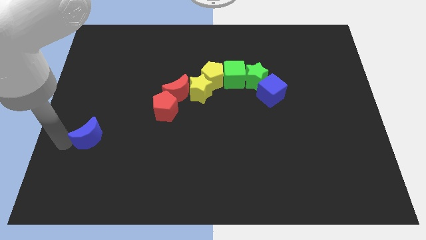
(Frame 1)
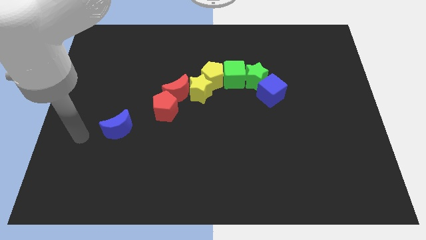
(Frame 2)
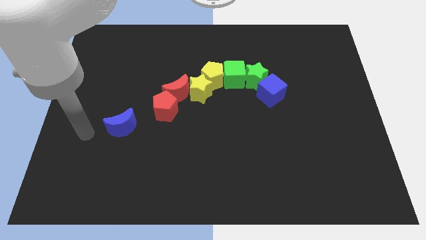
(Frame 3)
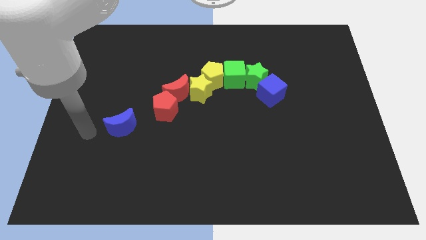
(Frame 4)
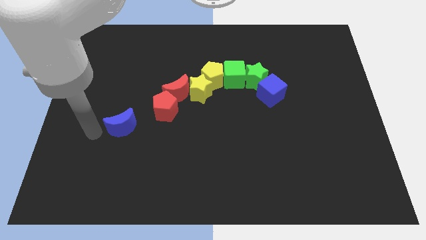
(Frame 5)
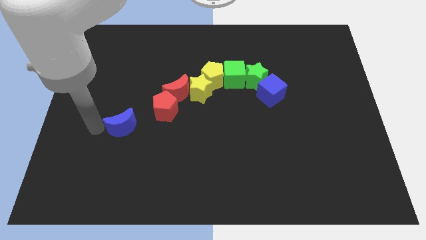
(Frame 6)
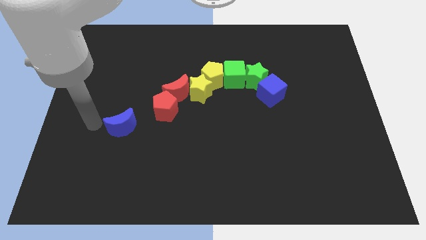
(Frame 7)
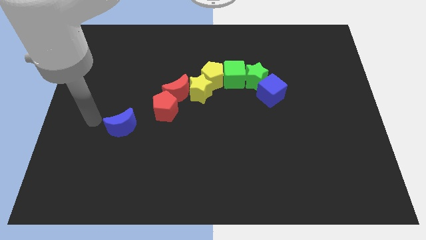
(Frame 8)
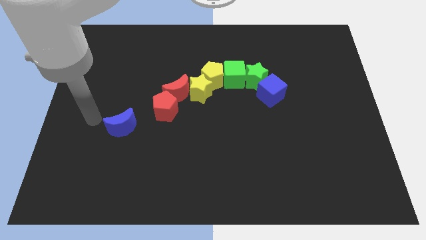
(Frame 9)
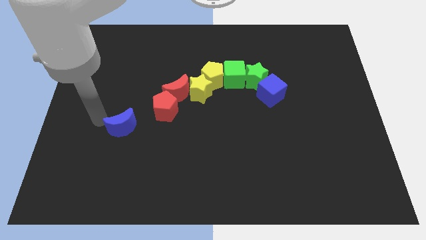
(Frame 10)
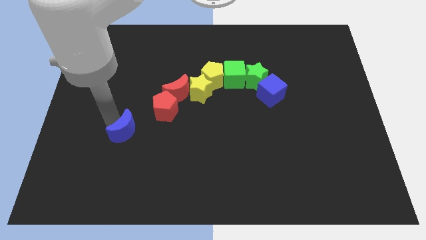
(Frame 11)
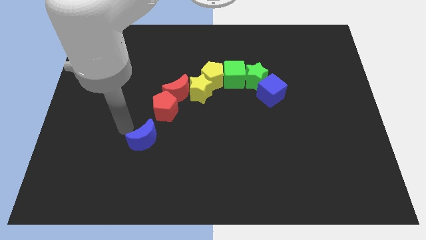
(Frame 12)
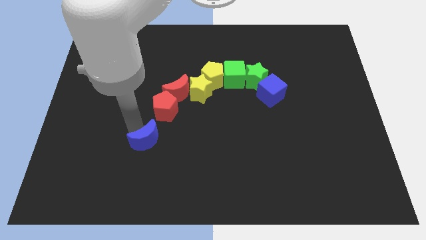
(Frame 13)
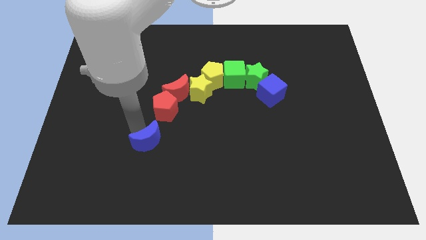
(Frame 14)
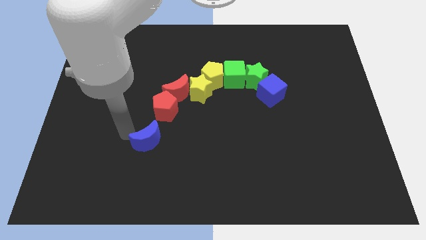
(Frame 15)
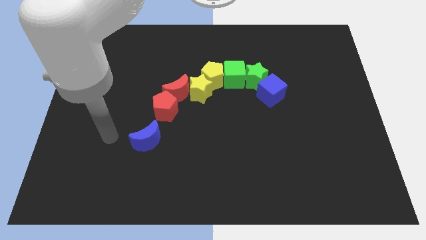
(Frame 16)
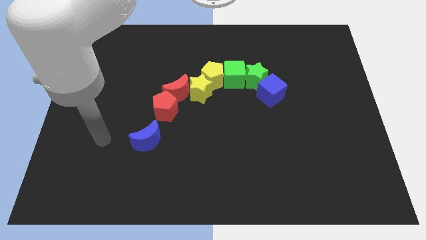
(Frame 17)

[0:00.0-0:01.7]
place blue crescent near to red pentagon

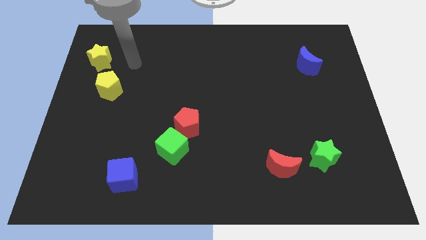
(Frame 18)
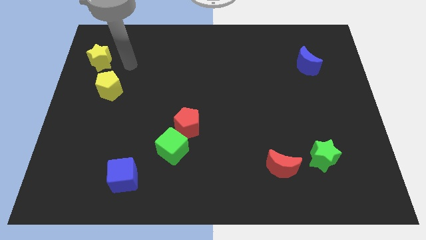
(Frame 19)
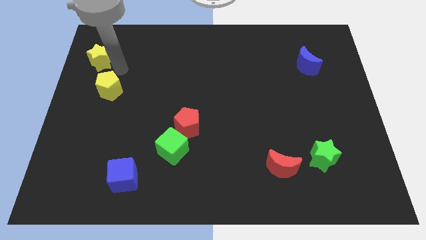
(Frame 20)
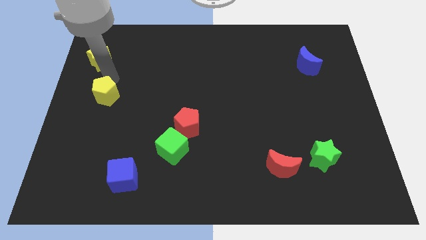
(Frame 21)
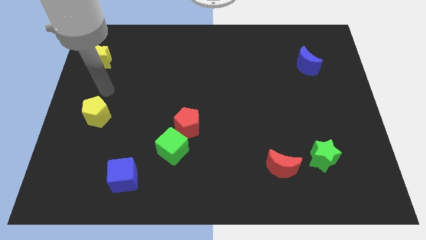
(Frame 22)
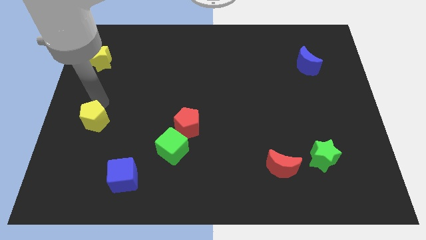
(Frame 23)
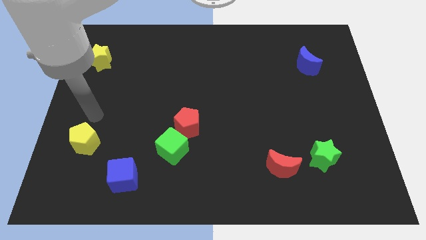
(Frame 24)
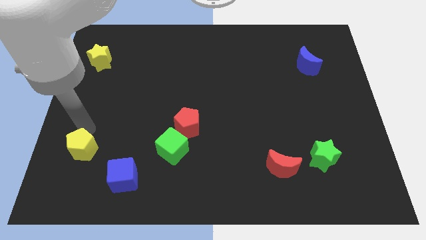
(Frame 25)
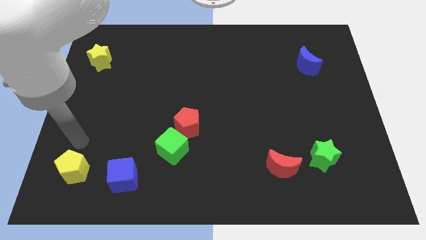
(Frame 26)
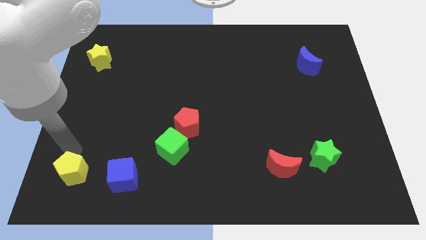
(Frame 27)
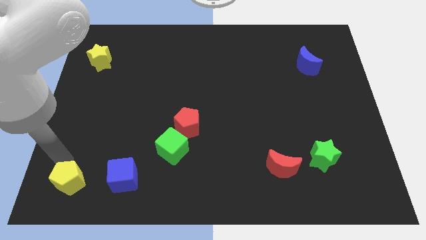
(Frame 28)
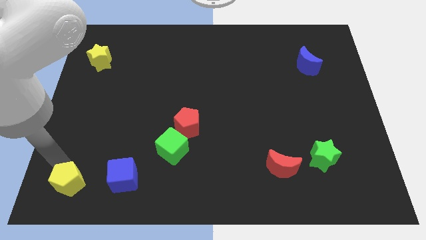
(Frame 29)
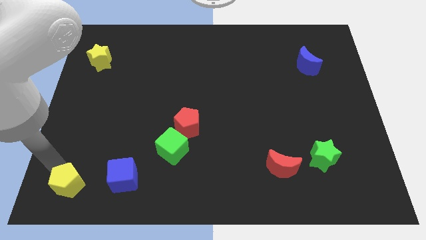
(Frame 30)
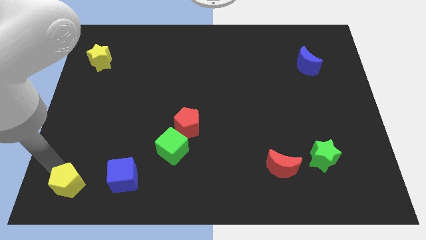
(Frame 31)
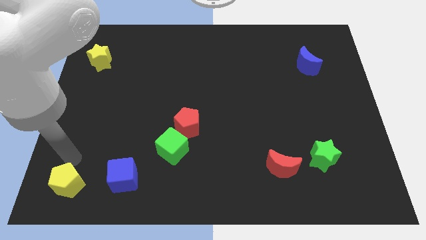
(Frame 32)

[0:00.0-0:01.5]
move the yellow pentagon bottom left to the board

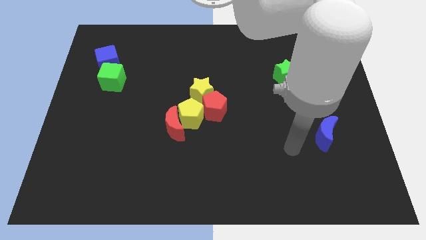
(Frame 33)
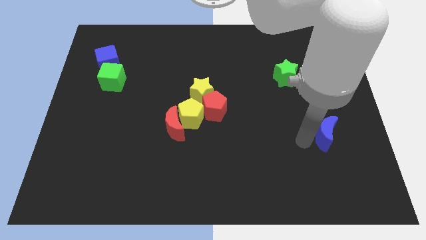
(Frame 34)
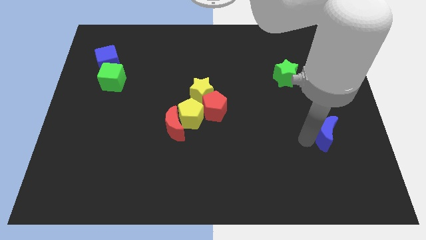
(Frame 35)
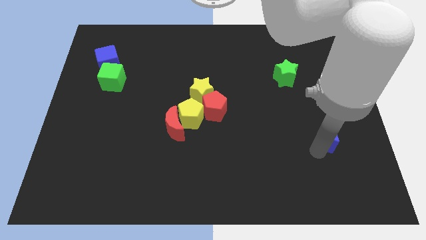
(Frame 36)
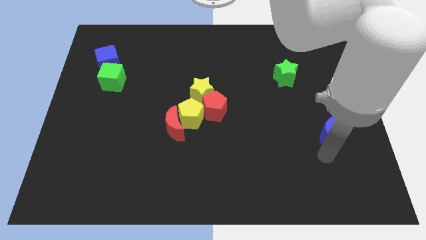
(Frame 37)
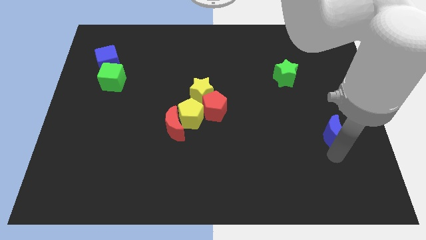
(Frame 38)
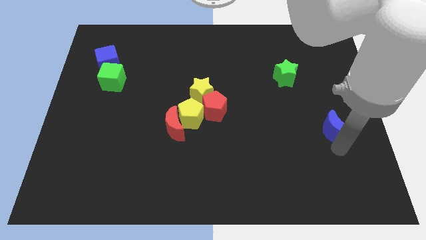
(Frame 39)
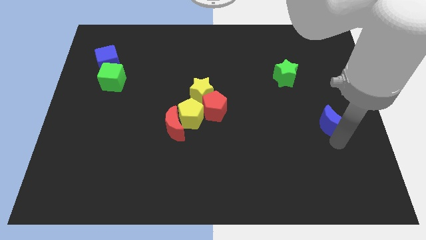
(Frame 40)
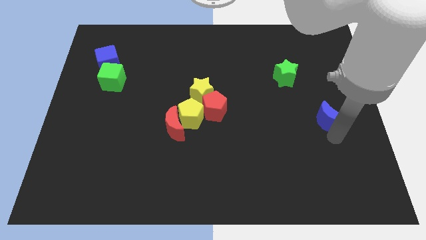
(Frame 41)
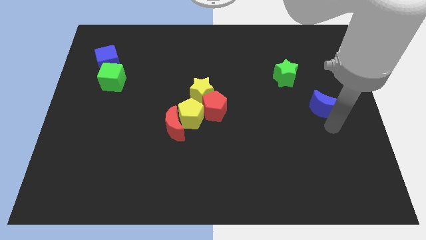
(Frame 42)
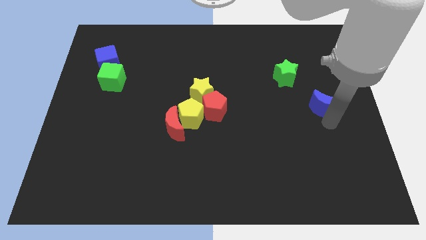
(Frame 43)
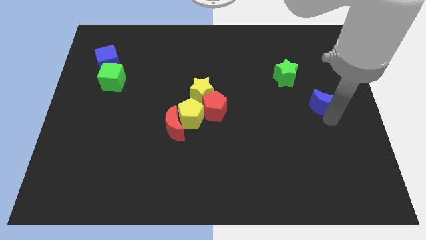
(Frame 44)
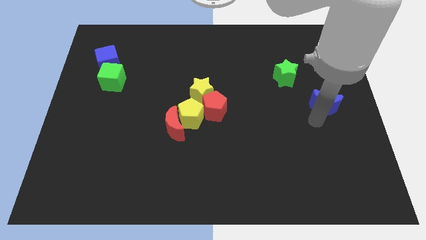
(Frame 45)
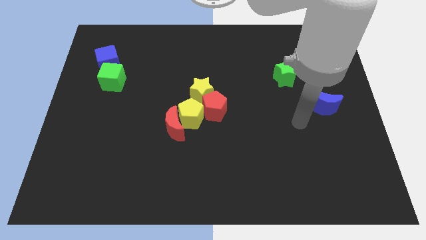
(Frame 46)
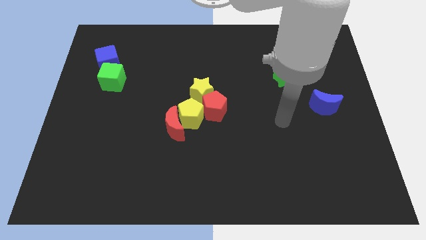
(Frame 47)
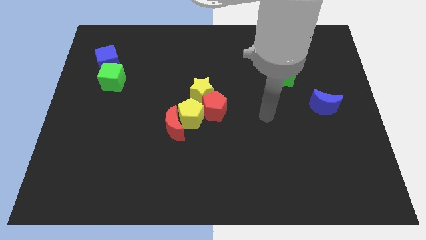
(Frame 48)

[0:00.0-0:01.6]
move the blue crescent upward to the right corner to green star

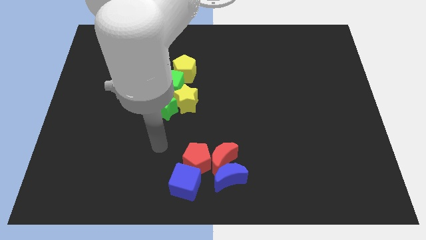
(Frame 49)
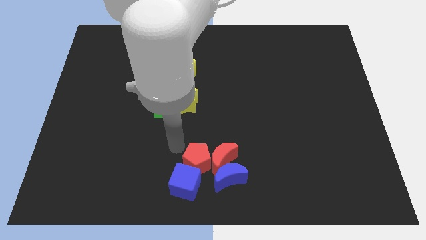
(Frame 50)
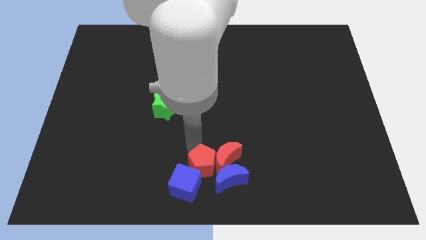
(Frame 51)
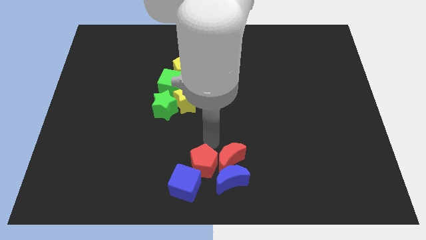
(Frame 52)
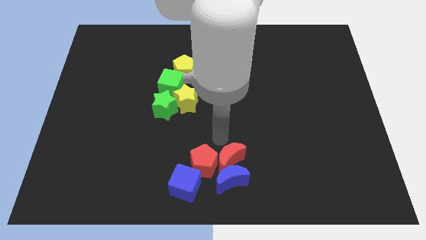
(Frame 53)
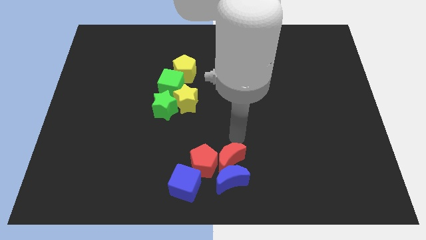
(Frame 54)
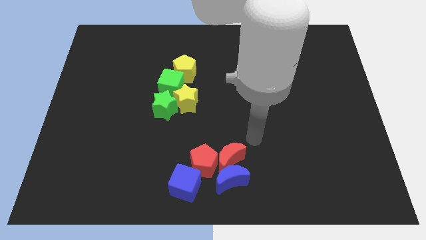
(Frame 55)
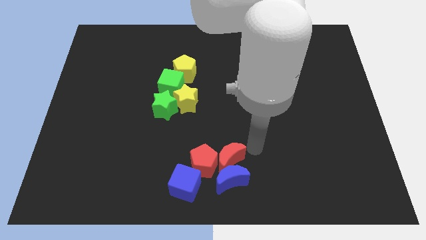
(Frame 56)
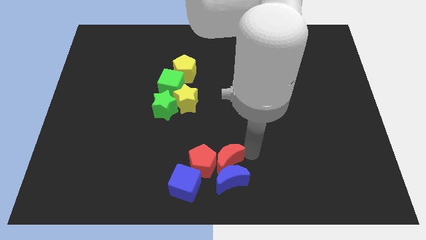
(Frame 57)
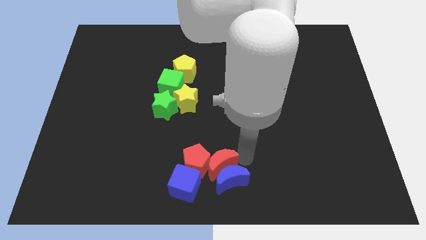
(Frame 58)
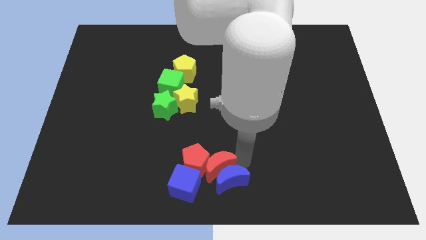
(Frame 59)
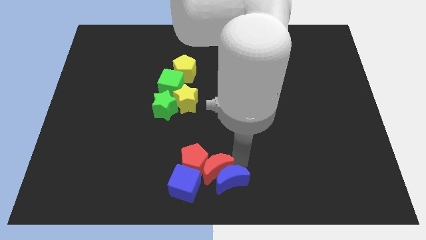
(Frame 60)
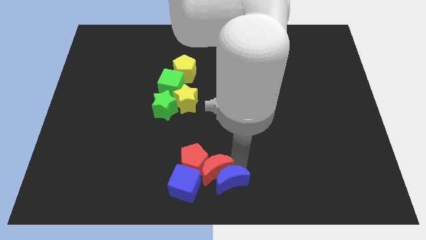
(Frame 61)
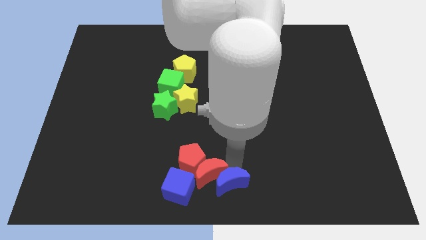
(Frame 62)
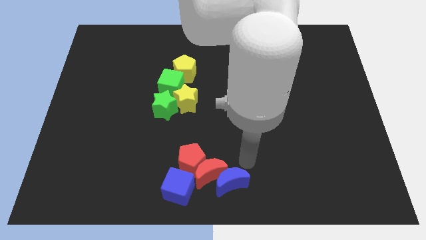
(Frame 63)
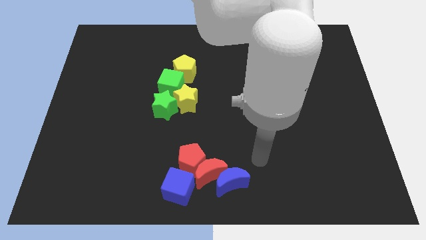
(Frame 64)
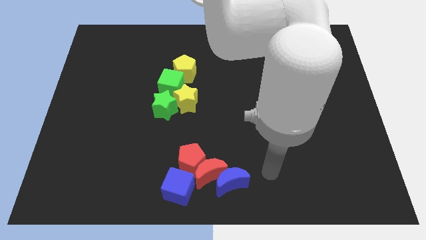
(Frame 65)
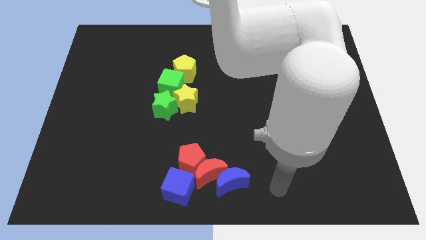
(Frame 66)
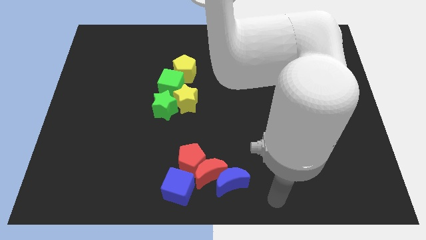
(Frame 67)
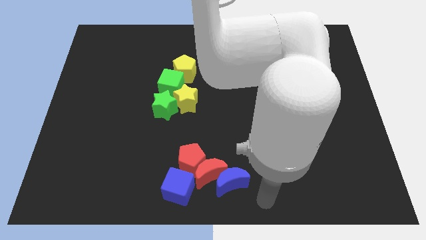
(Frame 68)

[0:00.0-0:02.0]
push the red moon and red pentagon into the blue cube

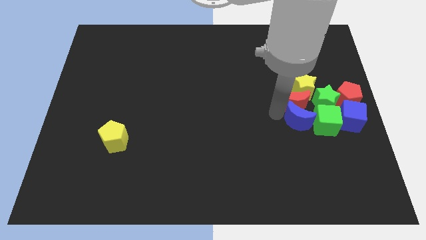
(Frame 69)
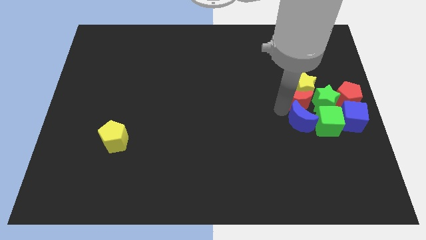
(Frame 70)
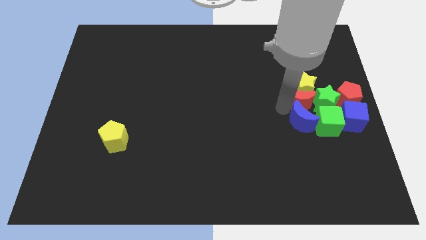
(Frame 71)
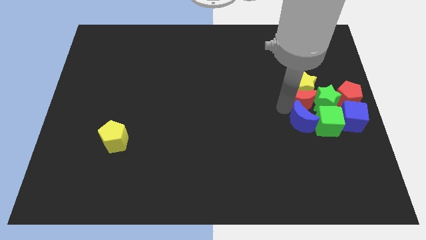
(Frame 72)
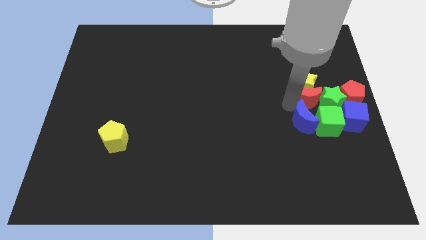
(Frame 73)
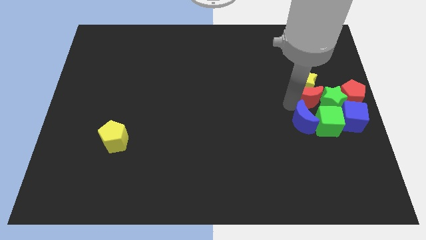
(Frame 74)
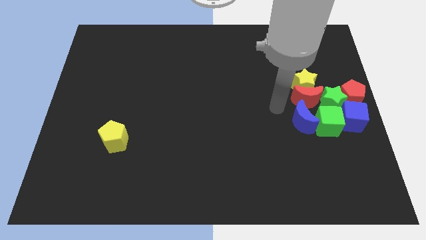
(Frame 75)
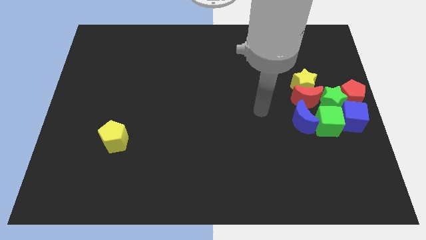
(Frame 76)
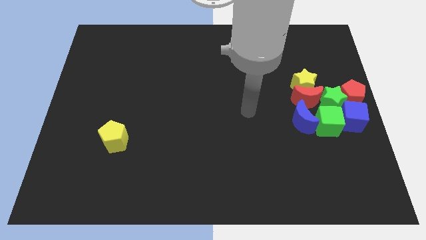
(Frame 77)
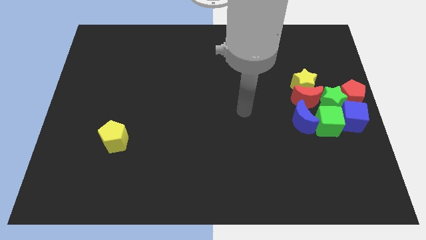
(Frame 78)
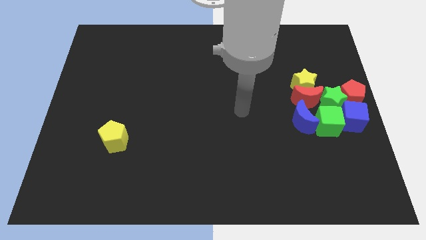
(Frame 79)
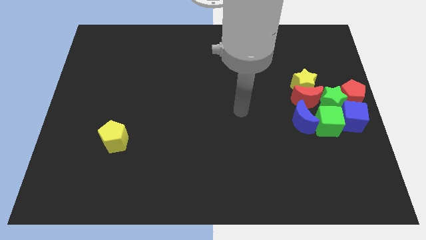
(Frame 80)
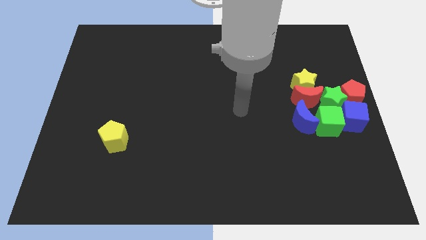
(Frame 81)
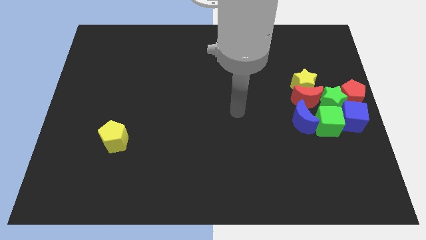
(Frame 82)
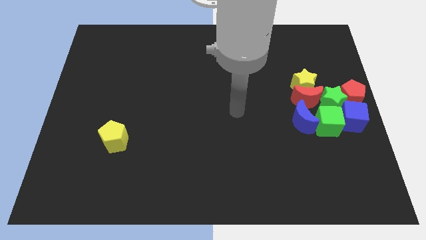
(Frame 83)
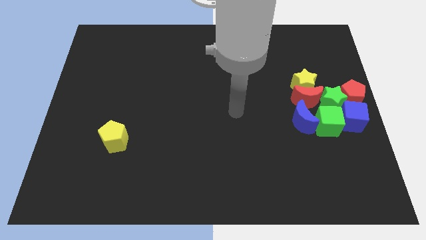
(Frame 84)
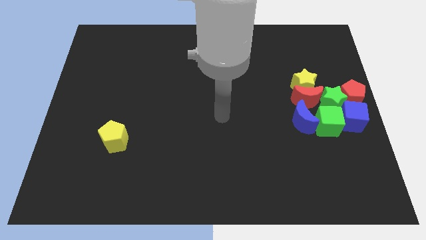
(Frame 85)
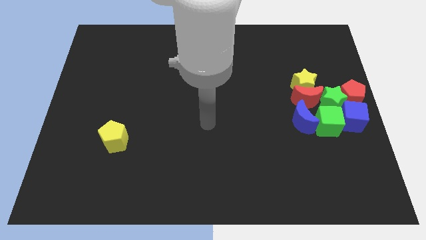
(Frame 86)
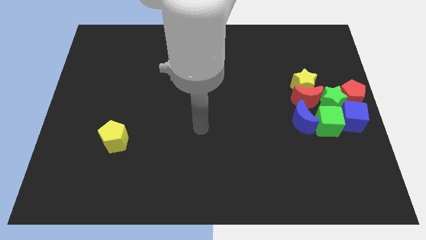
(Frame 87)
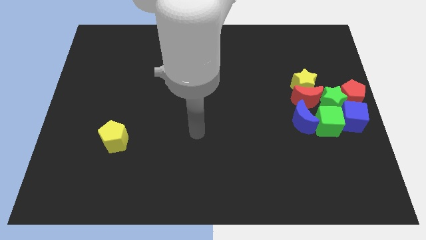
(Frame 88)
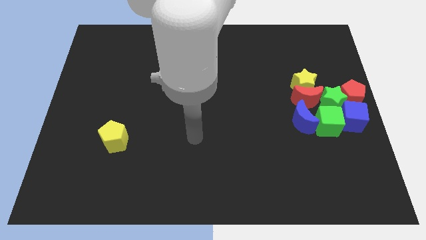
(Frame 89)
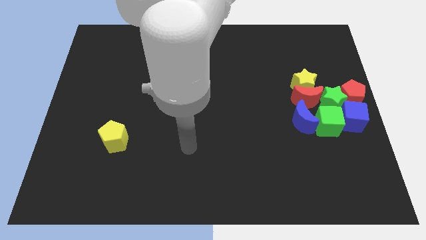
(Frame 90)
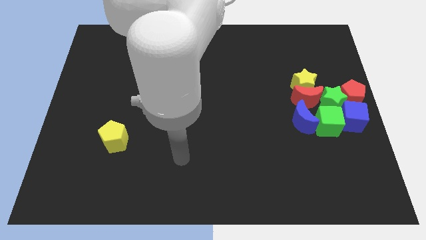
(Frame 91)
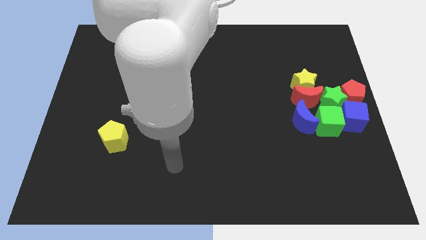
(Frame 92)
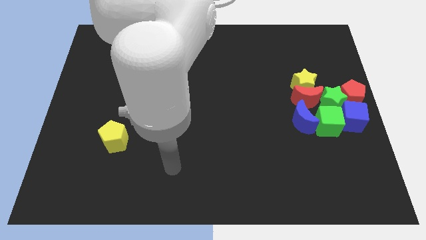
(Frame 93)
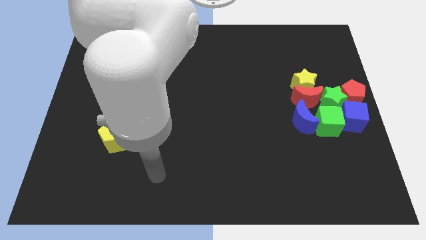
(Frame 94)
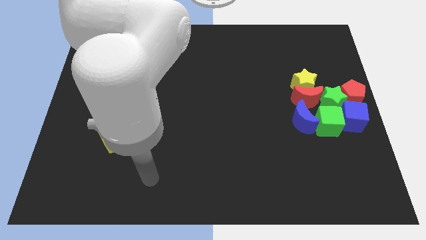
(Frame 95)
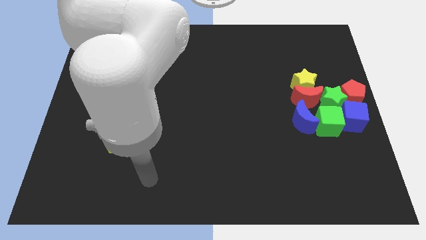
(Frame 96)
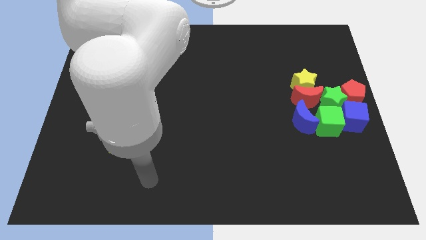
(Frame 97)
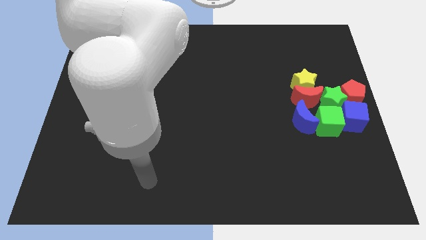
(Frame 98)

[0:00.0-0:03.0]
move arm away from red moon
